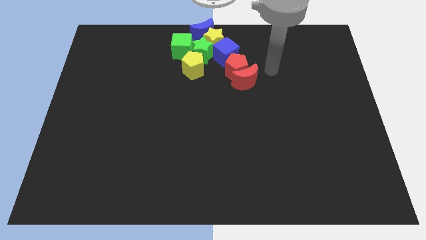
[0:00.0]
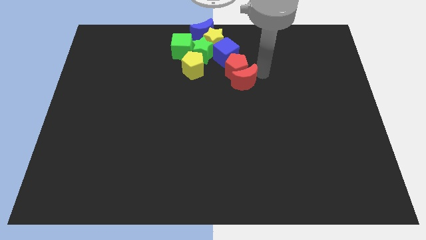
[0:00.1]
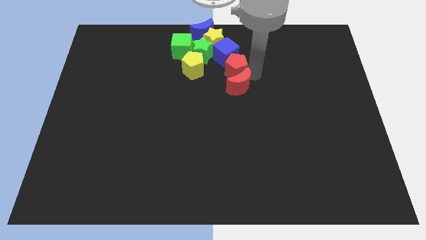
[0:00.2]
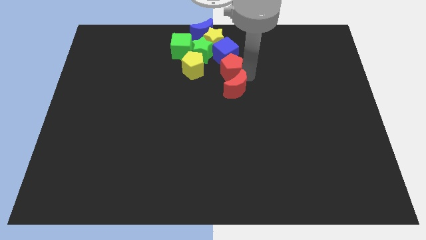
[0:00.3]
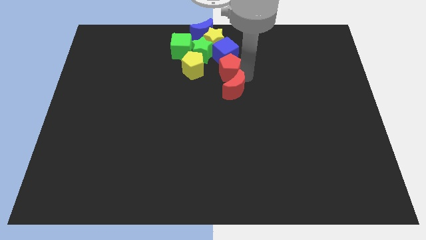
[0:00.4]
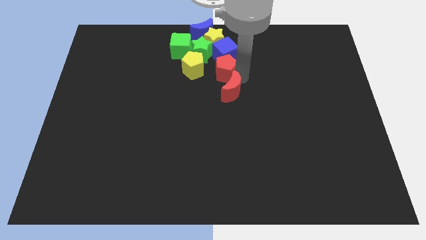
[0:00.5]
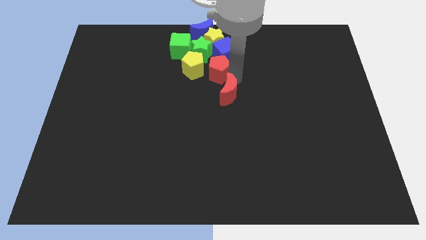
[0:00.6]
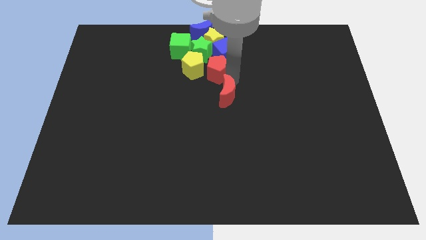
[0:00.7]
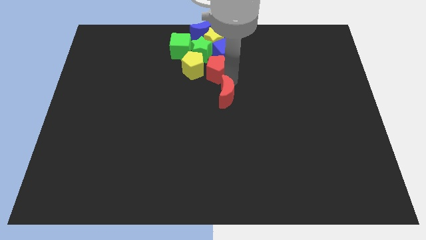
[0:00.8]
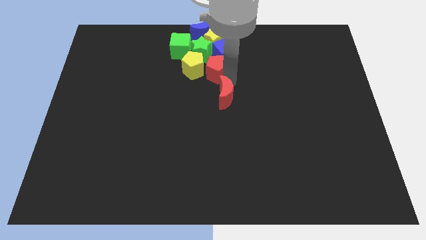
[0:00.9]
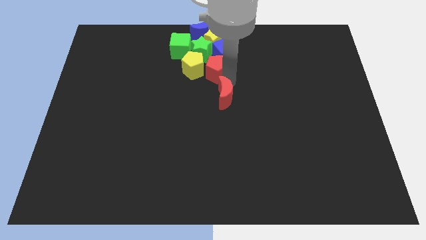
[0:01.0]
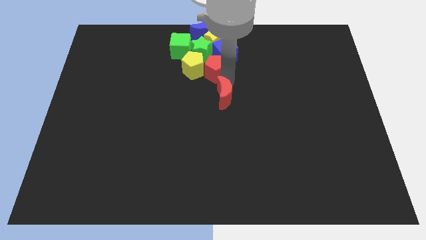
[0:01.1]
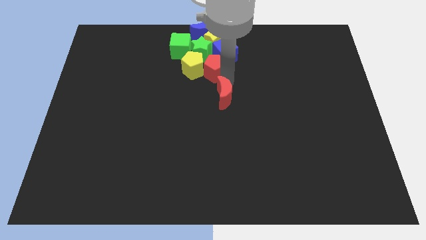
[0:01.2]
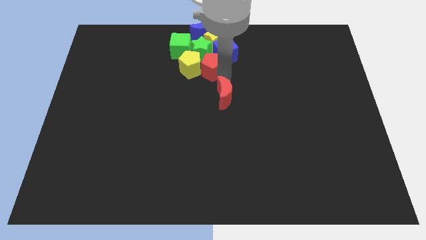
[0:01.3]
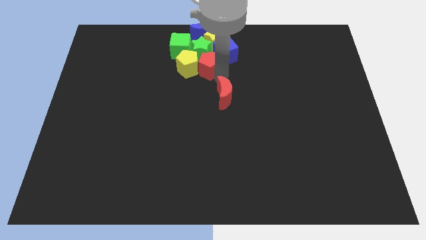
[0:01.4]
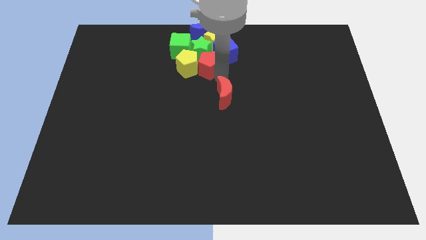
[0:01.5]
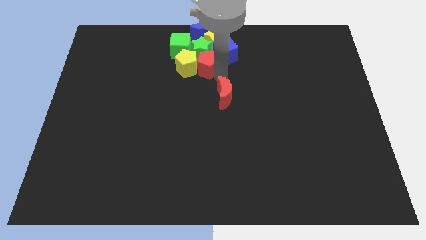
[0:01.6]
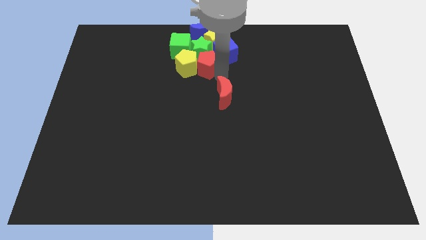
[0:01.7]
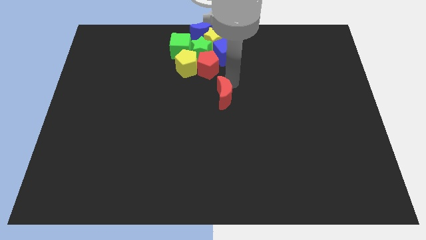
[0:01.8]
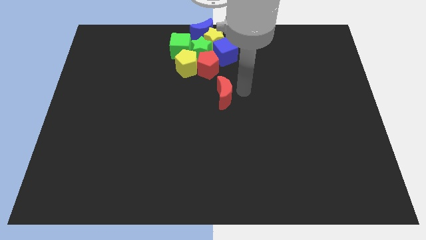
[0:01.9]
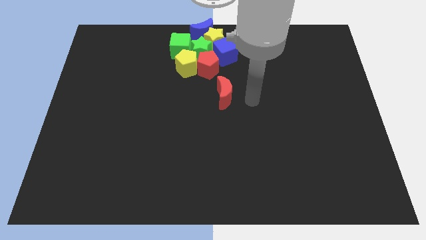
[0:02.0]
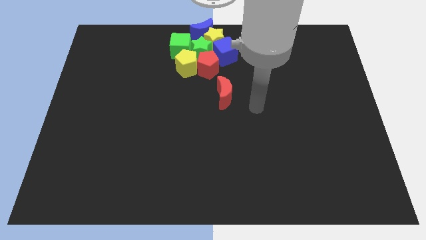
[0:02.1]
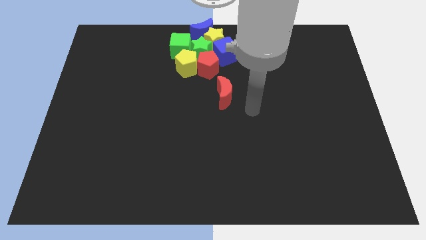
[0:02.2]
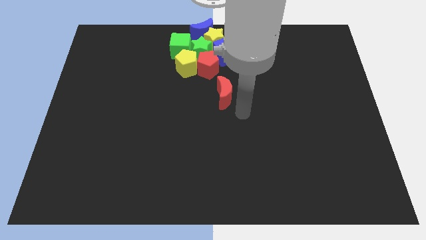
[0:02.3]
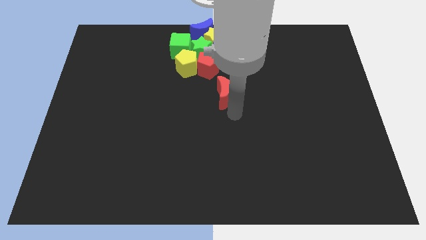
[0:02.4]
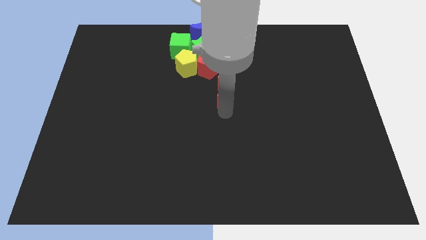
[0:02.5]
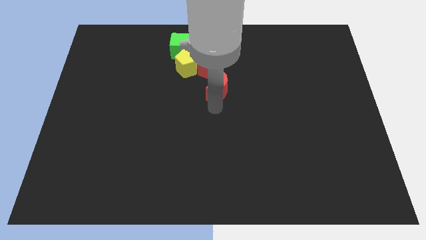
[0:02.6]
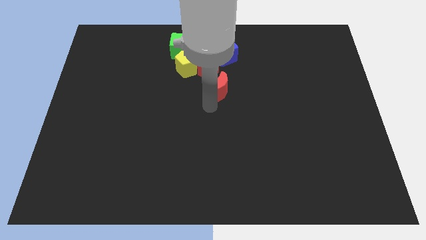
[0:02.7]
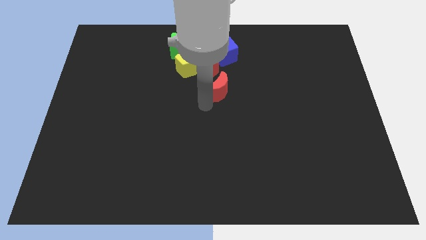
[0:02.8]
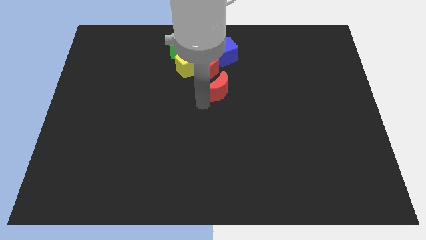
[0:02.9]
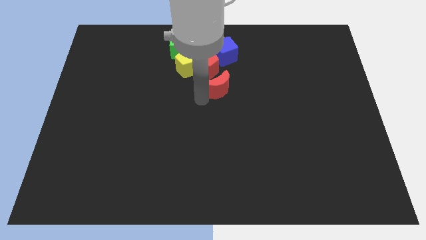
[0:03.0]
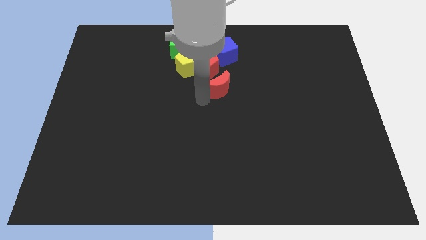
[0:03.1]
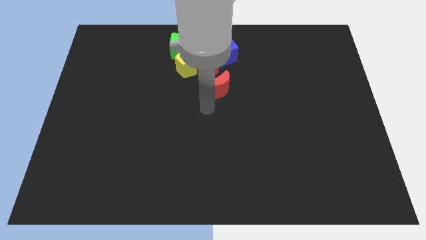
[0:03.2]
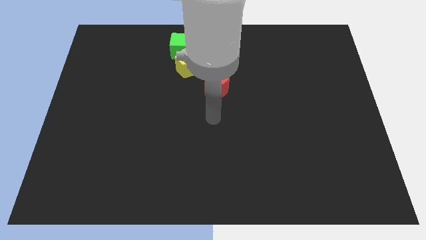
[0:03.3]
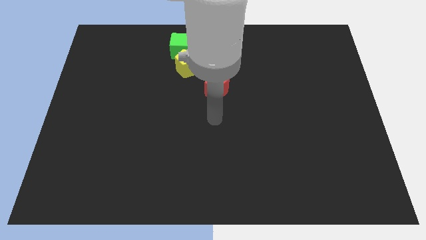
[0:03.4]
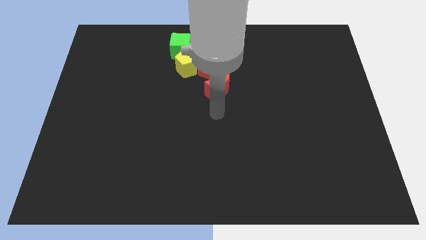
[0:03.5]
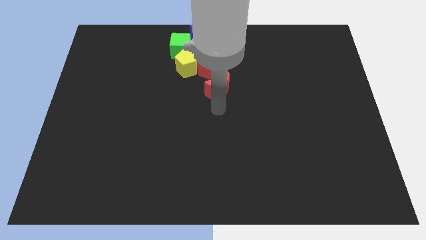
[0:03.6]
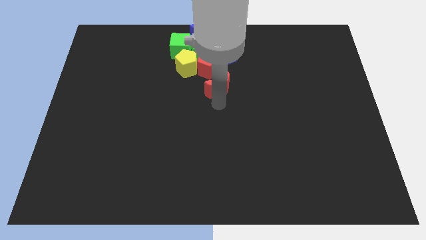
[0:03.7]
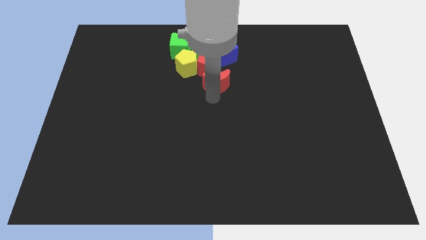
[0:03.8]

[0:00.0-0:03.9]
separate red crescent and the red pentagon

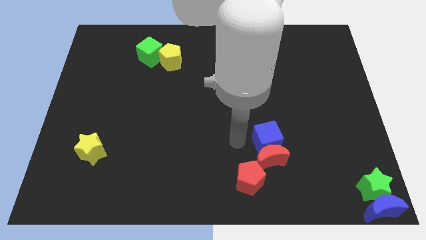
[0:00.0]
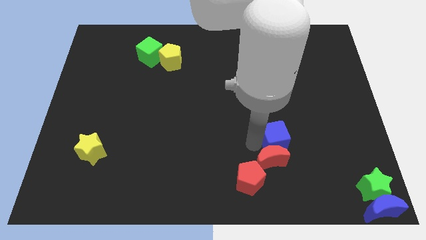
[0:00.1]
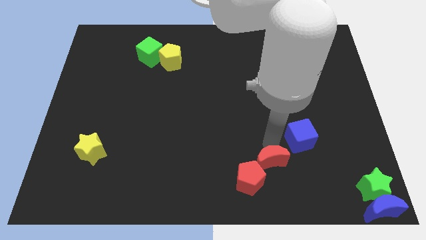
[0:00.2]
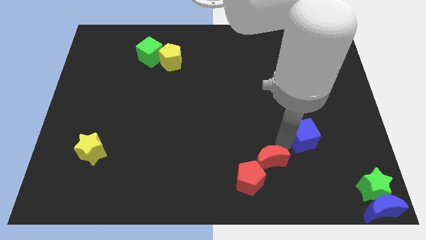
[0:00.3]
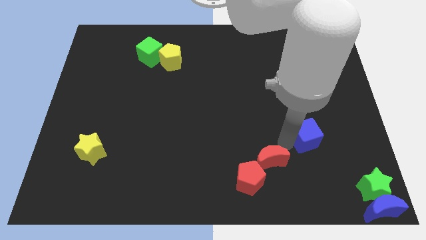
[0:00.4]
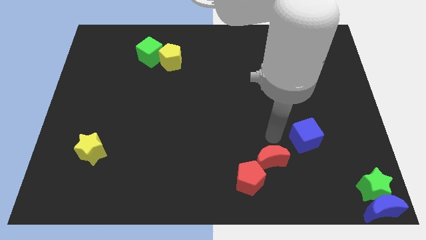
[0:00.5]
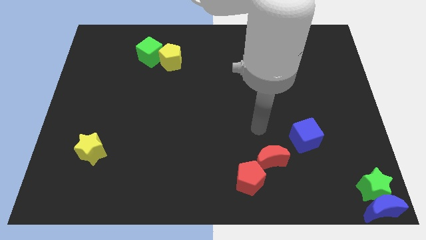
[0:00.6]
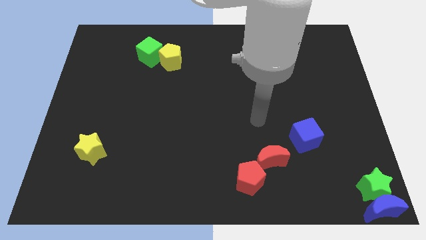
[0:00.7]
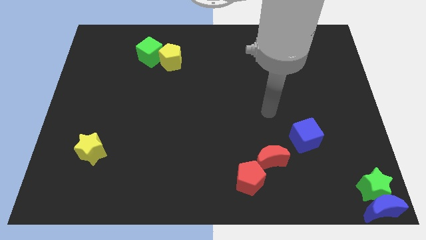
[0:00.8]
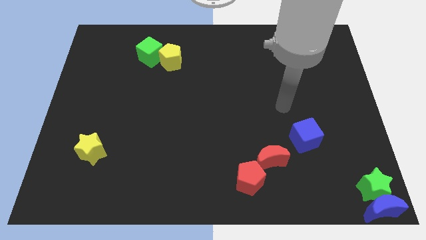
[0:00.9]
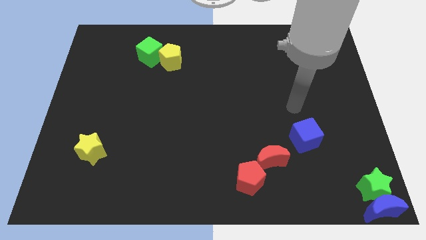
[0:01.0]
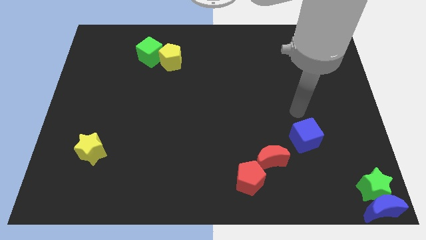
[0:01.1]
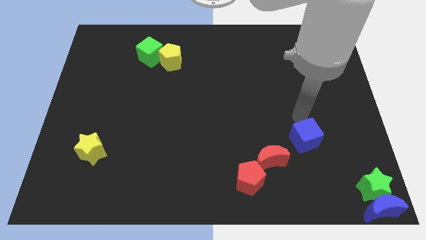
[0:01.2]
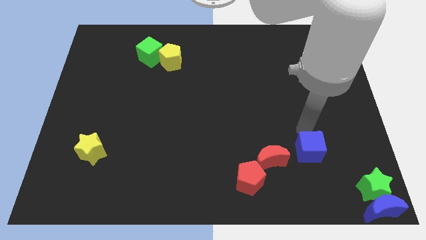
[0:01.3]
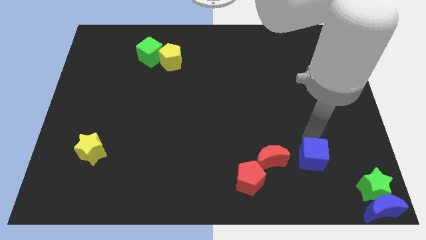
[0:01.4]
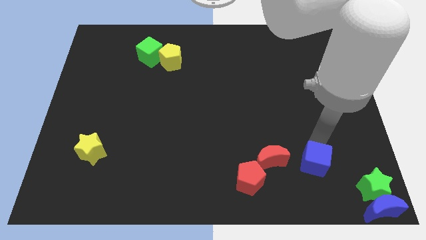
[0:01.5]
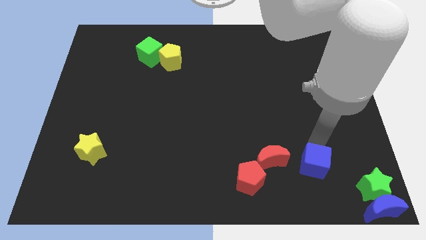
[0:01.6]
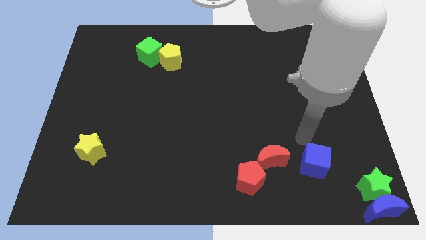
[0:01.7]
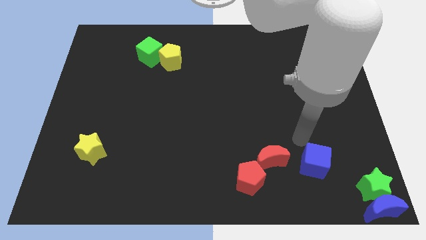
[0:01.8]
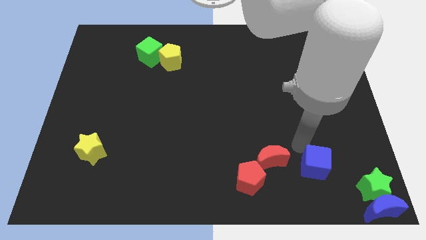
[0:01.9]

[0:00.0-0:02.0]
move the blue cube to the right of the red crescent

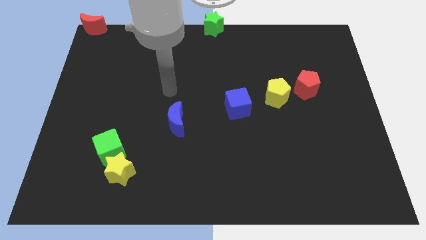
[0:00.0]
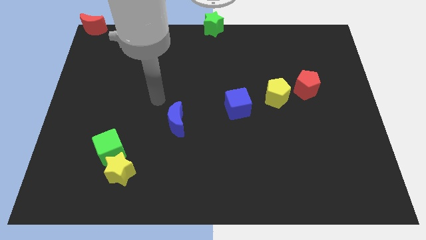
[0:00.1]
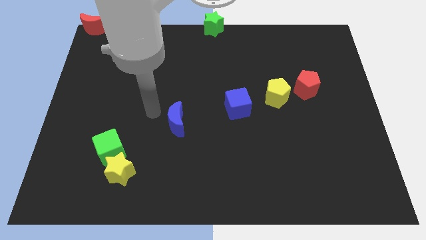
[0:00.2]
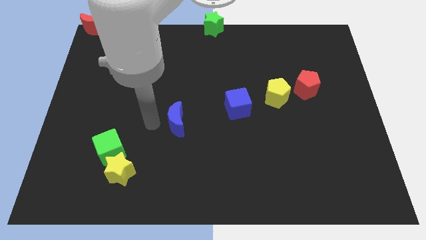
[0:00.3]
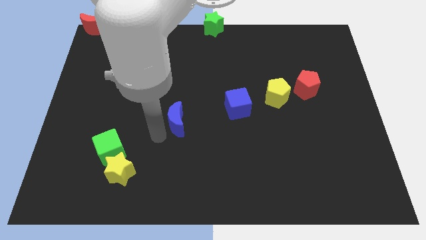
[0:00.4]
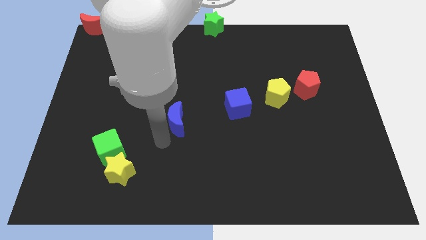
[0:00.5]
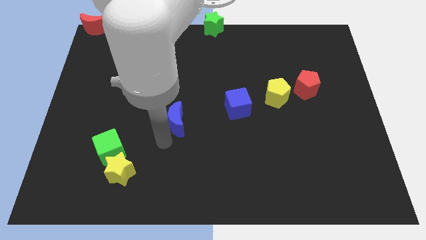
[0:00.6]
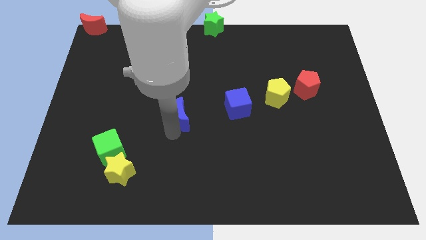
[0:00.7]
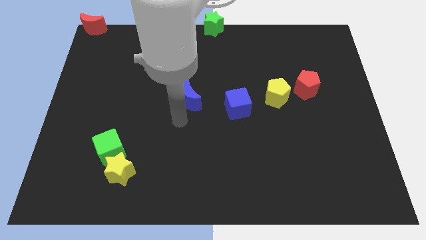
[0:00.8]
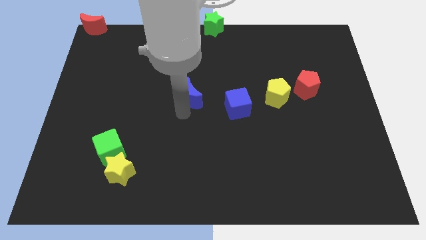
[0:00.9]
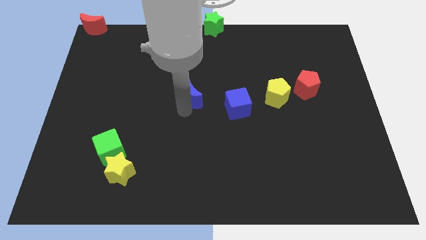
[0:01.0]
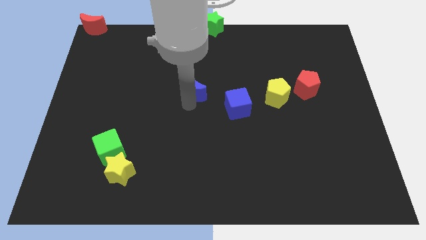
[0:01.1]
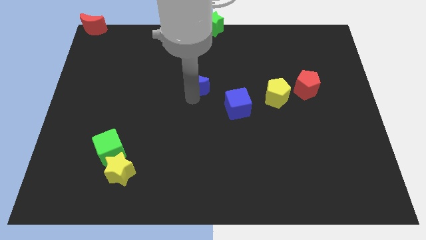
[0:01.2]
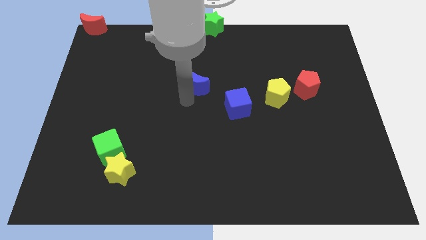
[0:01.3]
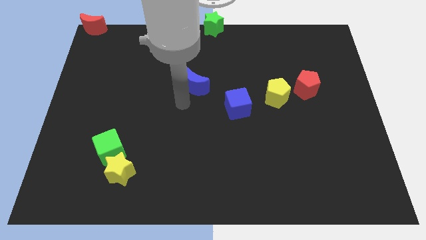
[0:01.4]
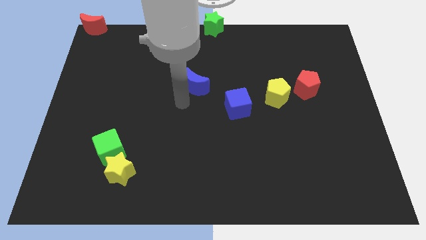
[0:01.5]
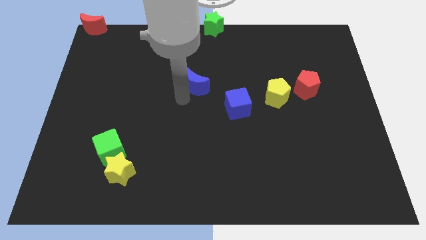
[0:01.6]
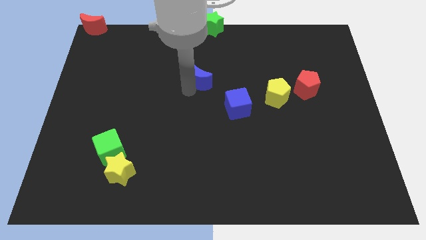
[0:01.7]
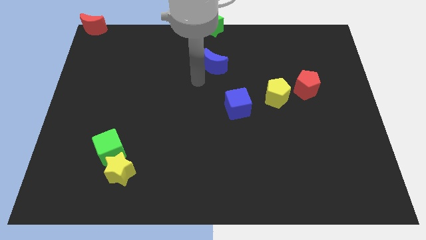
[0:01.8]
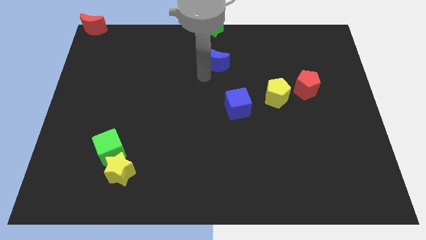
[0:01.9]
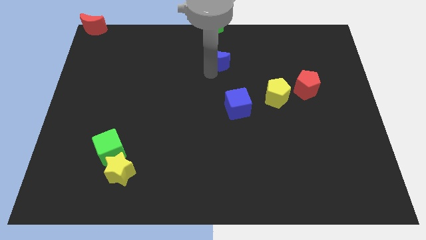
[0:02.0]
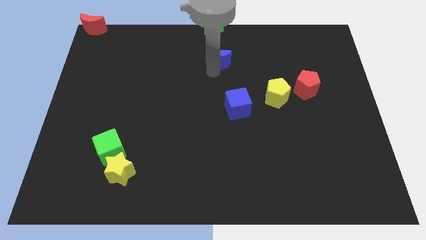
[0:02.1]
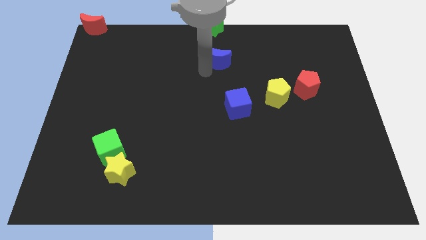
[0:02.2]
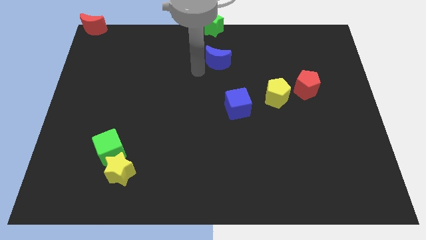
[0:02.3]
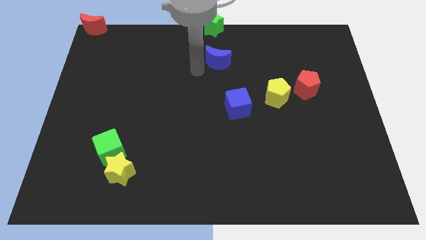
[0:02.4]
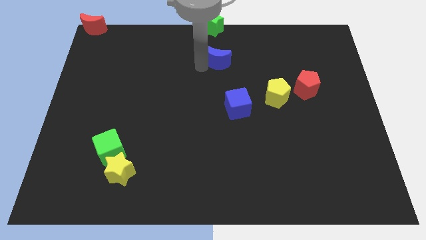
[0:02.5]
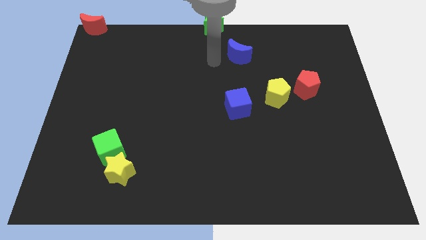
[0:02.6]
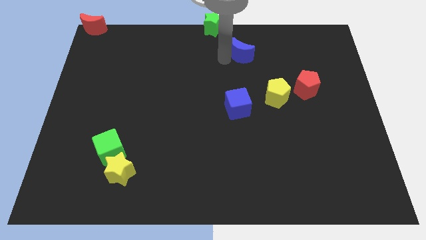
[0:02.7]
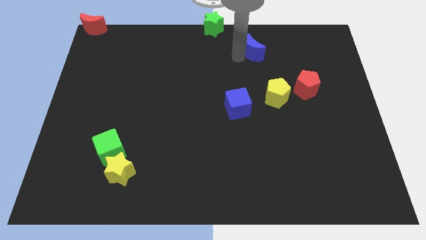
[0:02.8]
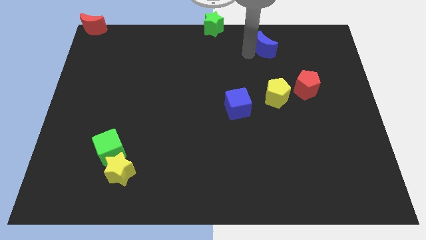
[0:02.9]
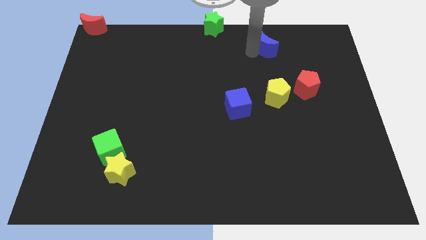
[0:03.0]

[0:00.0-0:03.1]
push blue crescent below yellow pentagon
